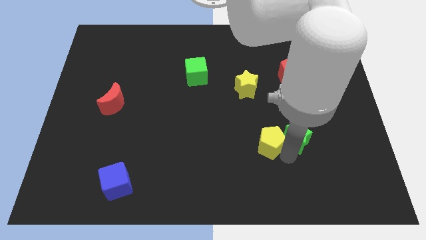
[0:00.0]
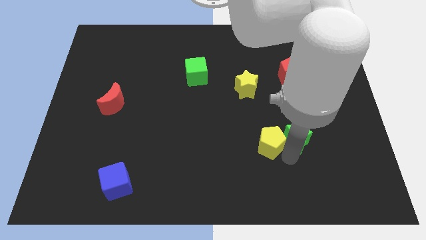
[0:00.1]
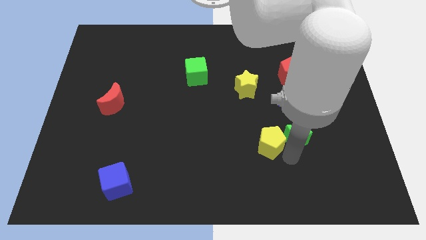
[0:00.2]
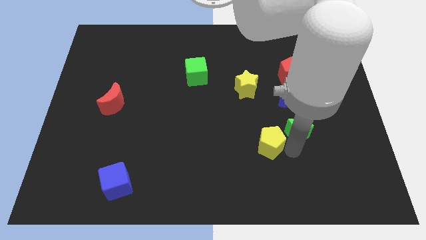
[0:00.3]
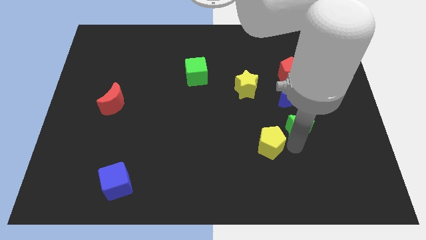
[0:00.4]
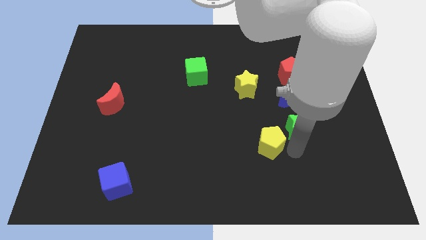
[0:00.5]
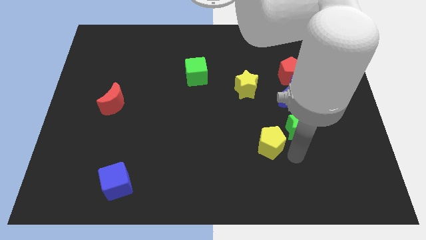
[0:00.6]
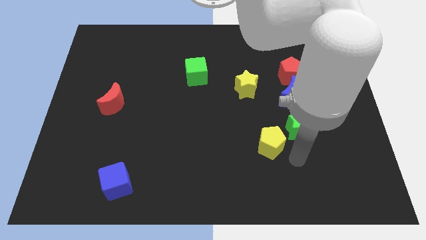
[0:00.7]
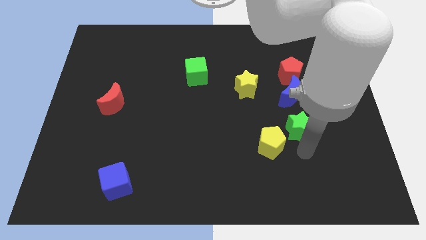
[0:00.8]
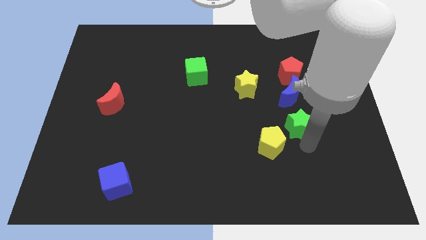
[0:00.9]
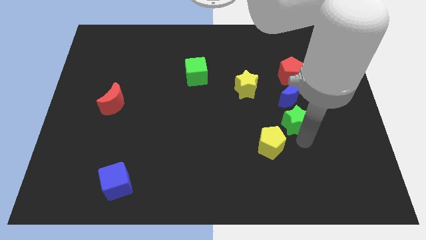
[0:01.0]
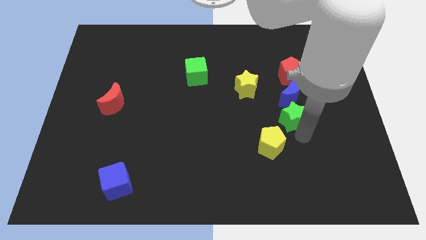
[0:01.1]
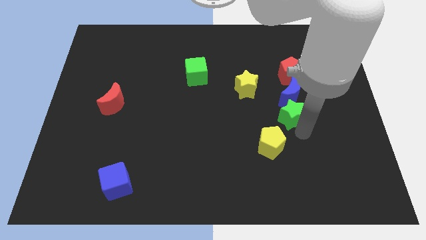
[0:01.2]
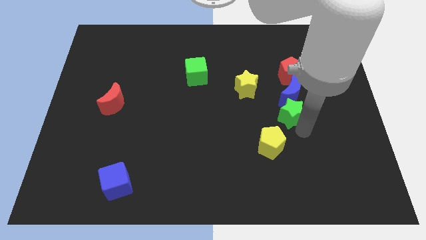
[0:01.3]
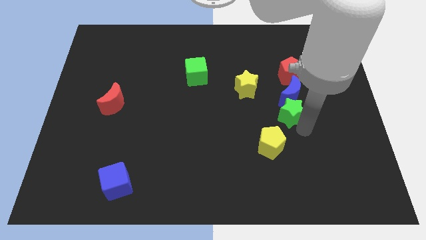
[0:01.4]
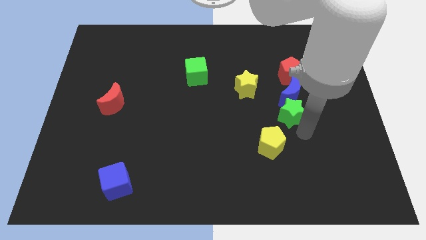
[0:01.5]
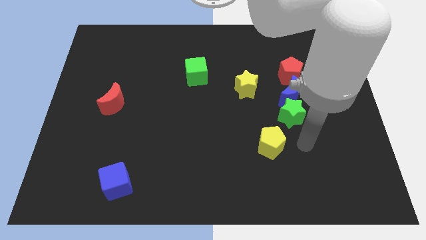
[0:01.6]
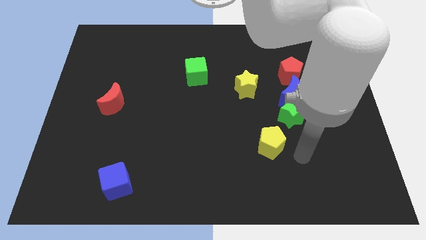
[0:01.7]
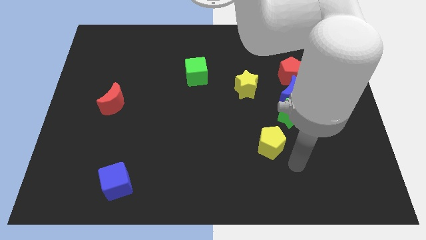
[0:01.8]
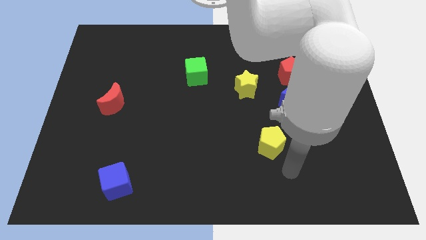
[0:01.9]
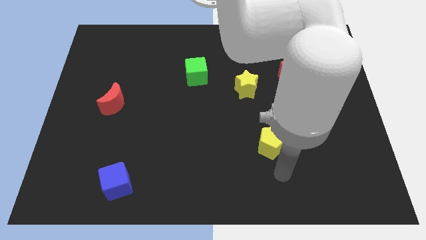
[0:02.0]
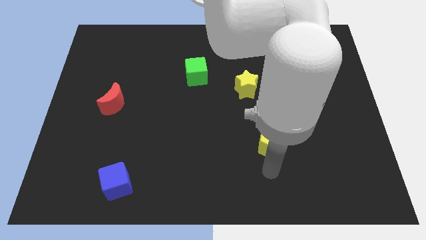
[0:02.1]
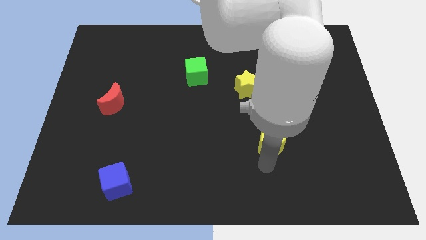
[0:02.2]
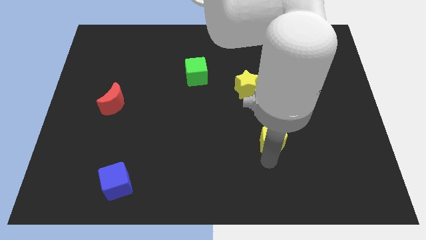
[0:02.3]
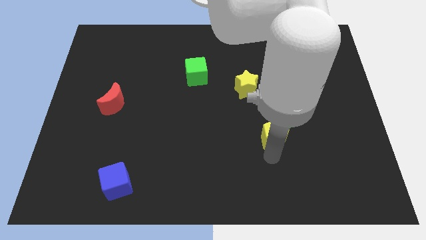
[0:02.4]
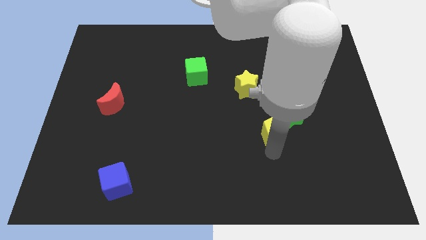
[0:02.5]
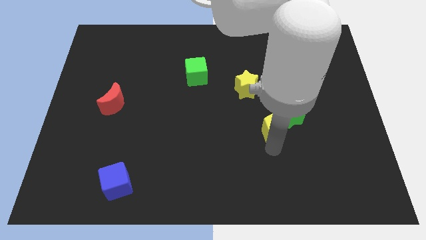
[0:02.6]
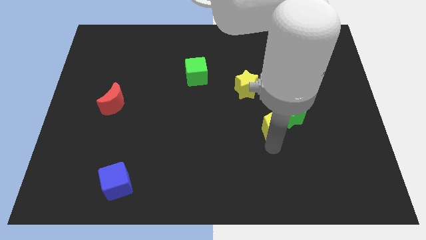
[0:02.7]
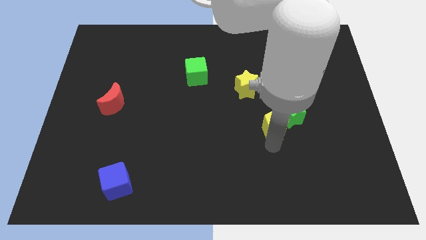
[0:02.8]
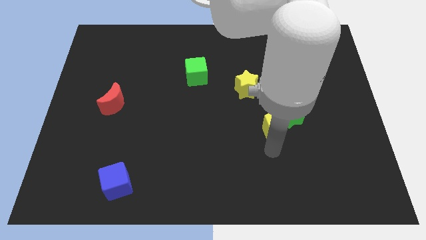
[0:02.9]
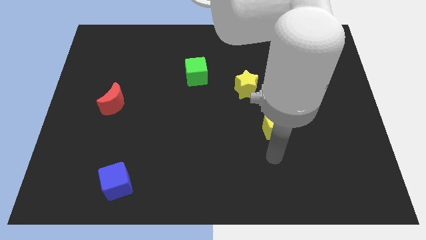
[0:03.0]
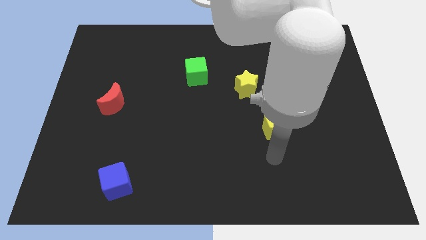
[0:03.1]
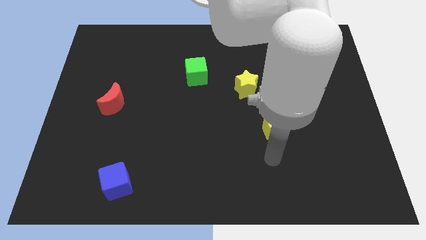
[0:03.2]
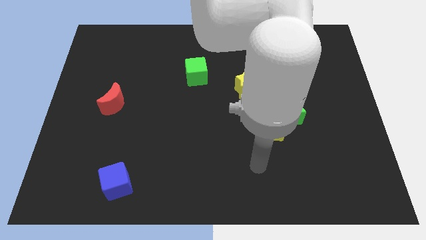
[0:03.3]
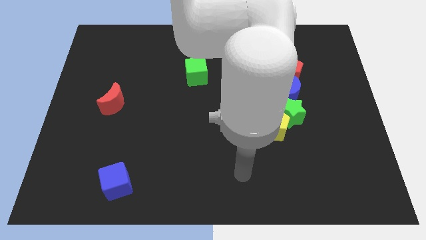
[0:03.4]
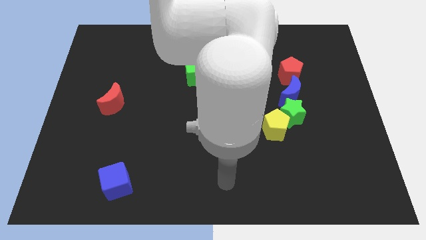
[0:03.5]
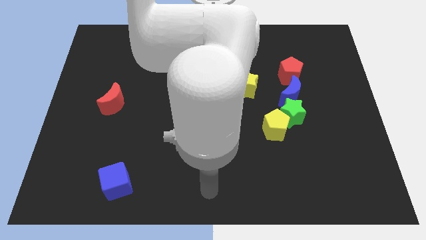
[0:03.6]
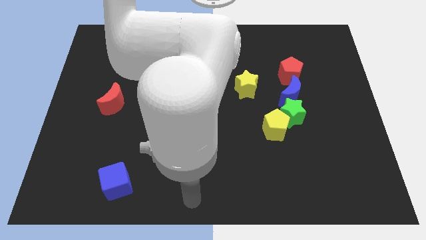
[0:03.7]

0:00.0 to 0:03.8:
push yellow pentagon towards green star

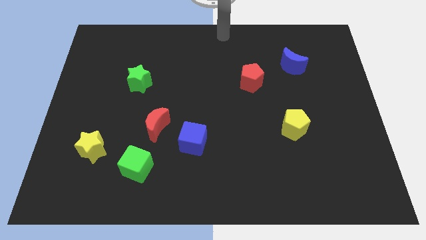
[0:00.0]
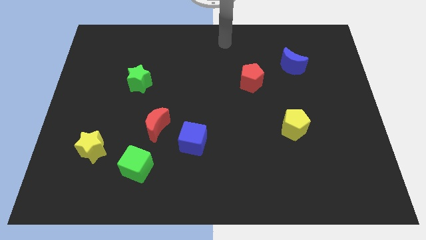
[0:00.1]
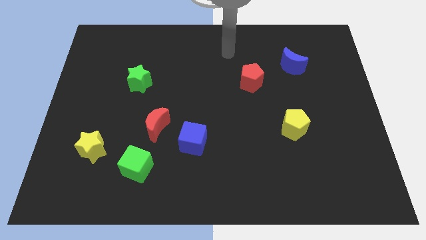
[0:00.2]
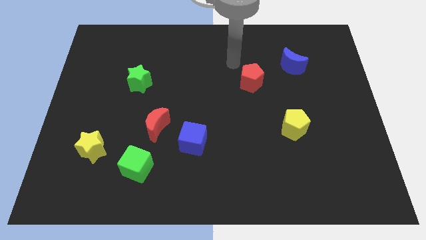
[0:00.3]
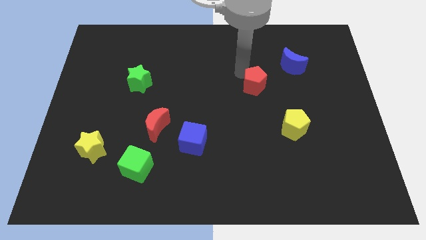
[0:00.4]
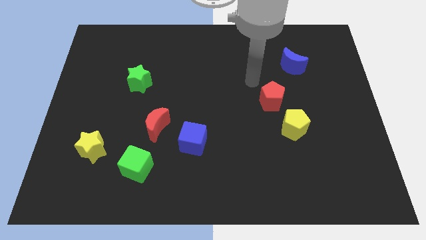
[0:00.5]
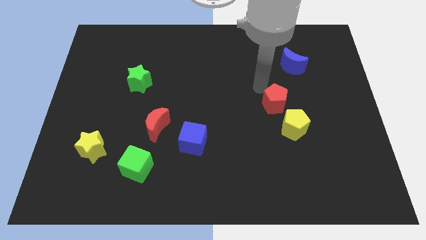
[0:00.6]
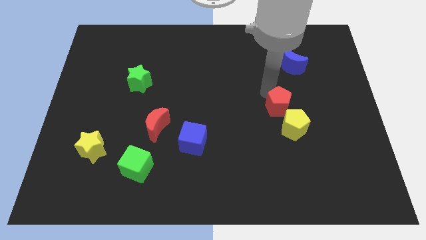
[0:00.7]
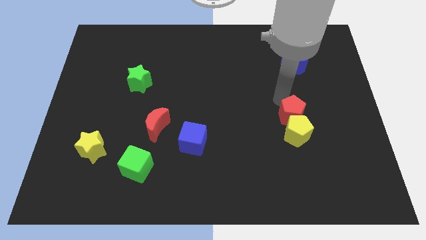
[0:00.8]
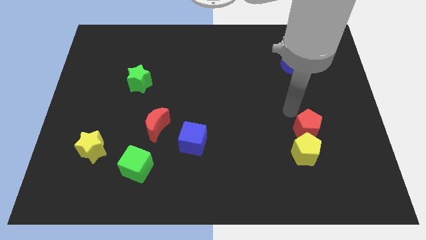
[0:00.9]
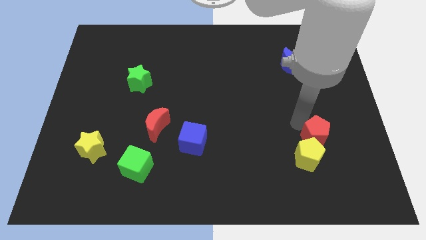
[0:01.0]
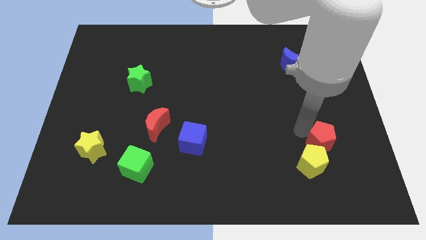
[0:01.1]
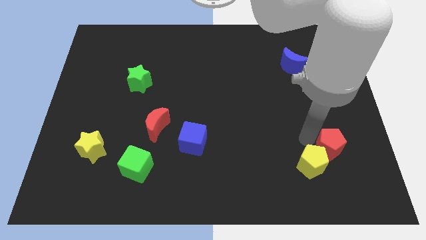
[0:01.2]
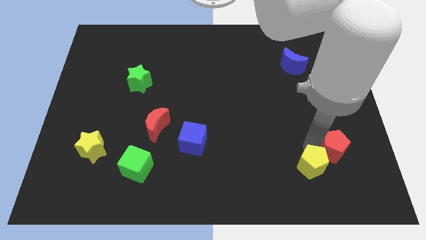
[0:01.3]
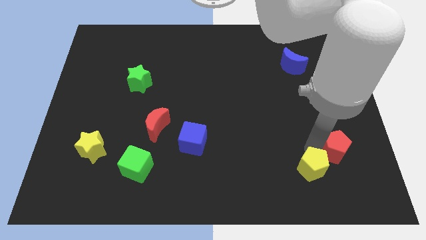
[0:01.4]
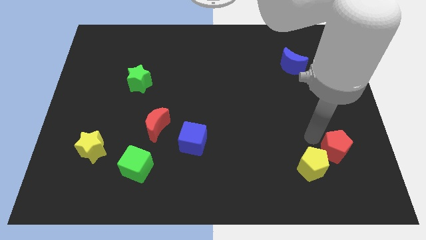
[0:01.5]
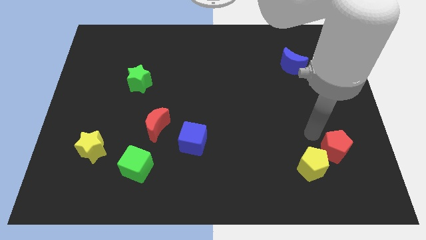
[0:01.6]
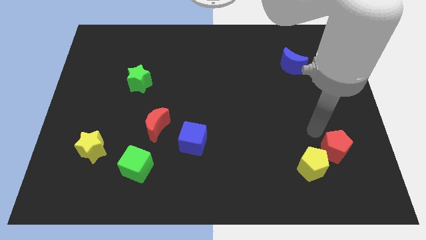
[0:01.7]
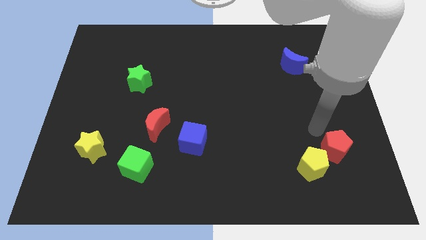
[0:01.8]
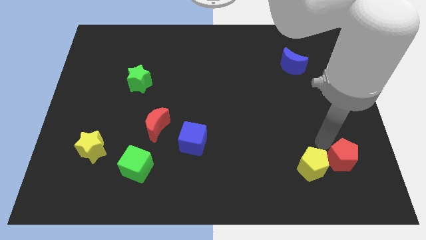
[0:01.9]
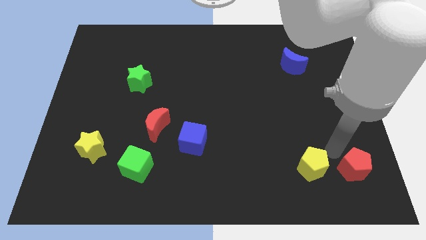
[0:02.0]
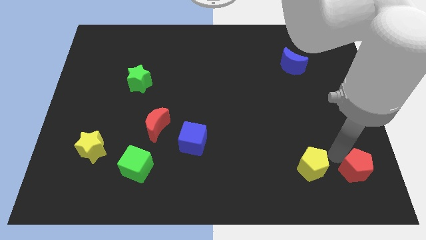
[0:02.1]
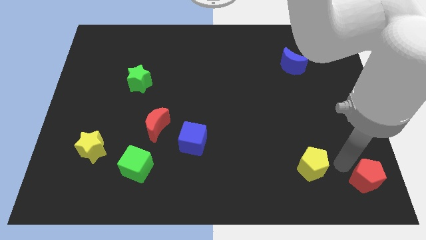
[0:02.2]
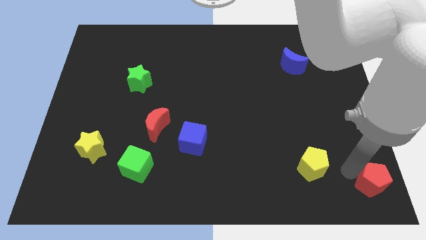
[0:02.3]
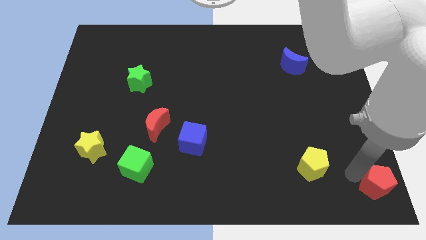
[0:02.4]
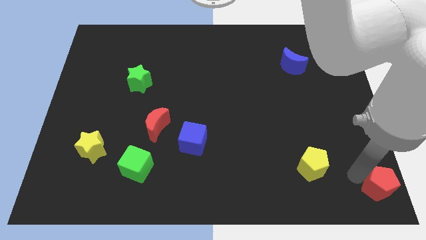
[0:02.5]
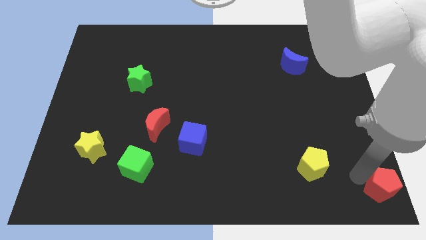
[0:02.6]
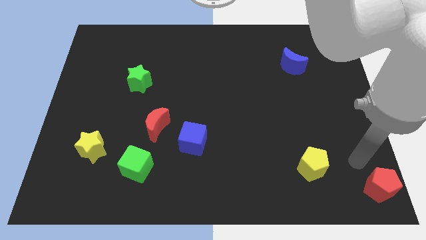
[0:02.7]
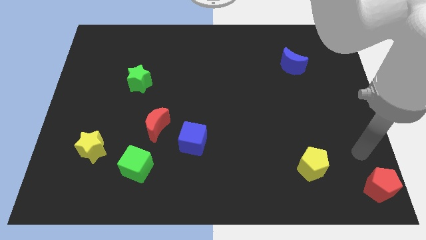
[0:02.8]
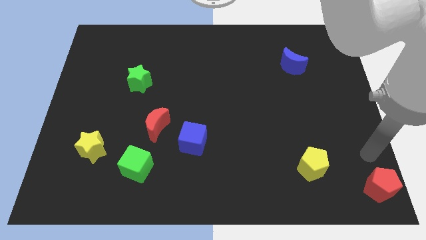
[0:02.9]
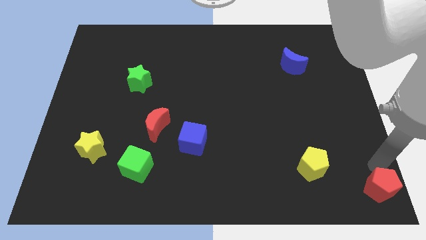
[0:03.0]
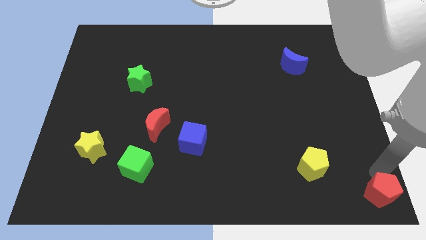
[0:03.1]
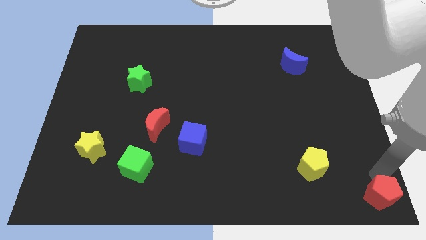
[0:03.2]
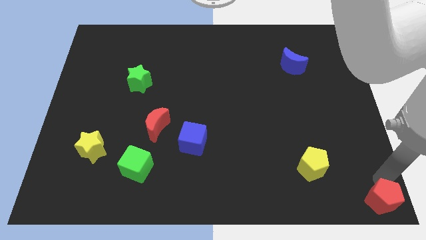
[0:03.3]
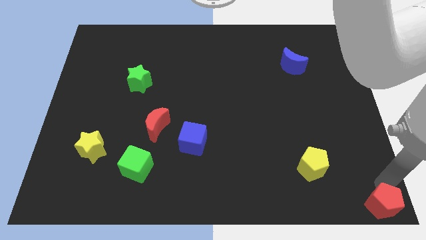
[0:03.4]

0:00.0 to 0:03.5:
place the red pentagon at the bottom right corner of the board

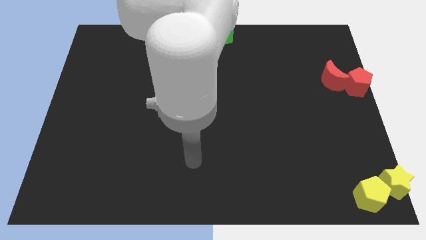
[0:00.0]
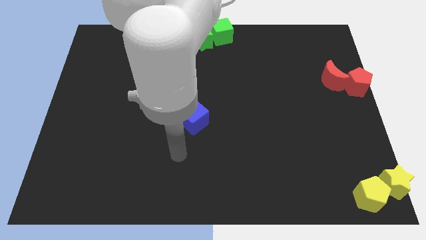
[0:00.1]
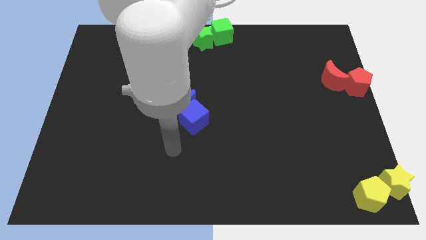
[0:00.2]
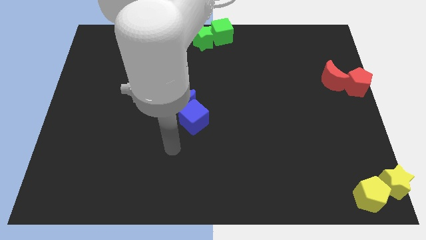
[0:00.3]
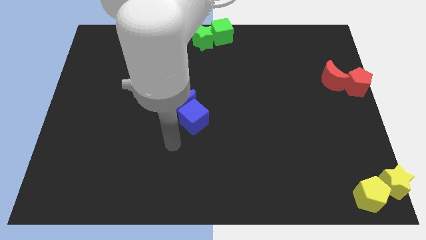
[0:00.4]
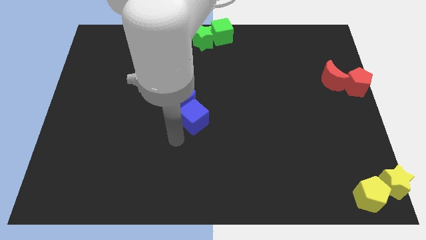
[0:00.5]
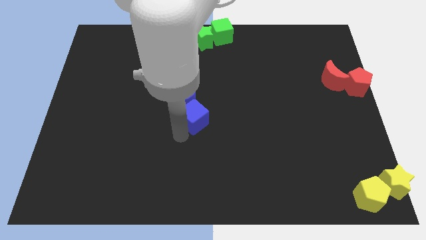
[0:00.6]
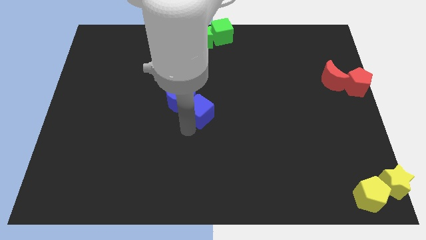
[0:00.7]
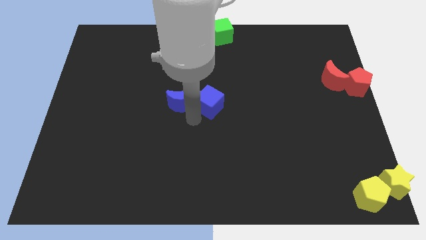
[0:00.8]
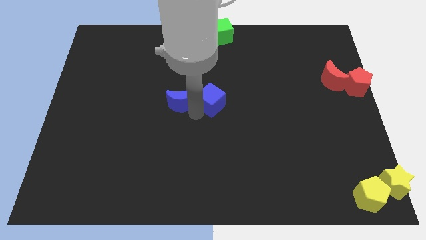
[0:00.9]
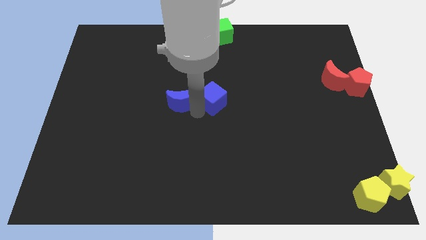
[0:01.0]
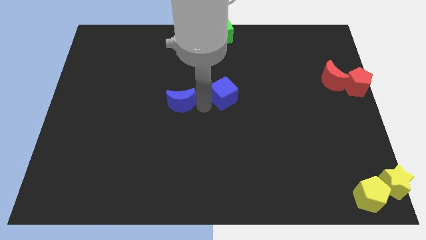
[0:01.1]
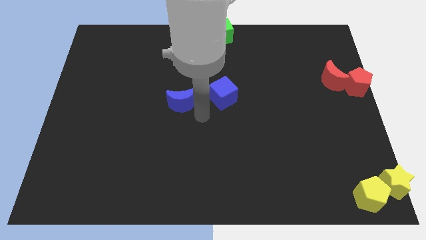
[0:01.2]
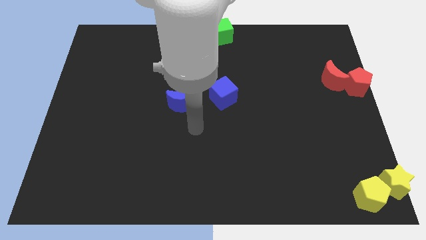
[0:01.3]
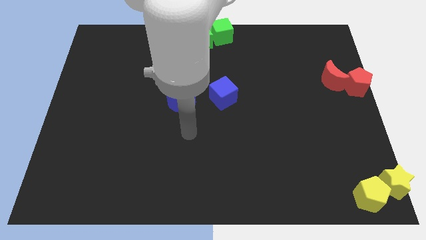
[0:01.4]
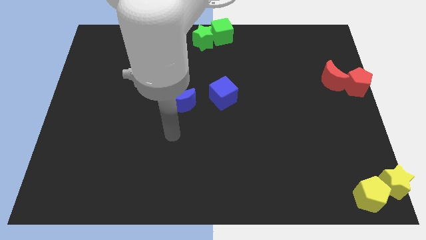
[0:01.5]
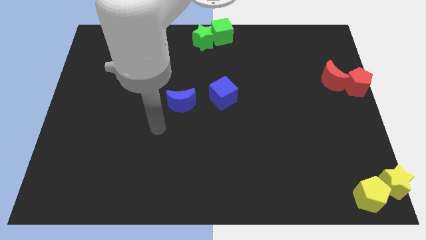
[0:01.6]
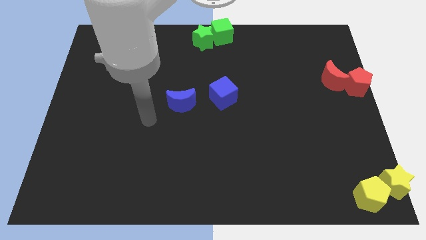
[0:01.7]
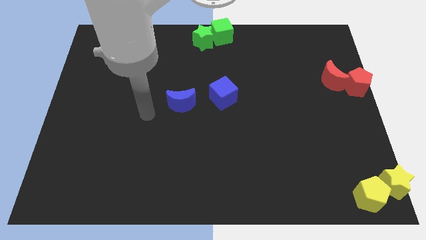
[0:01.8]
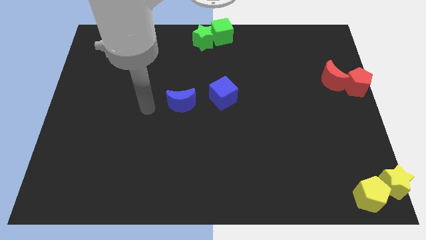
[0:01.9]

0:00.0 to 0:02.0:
place the blue cube away from the blue crescent
